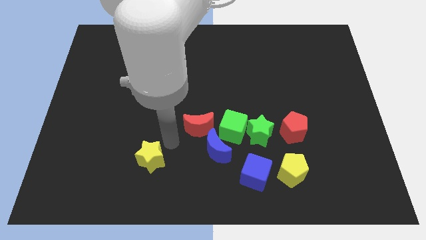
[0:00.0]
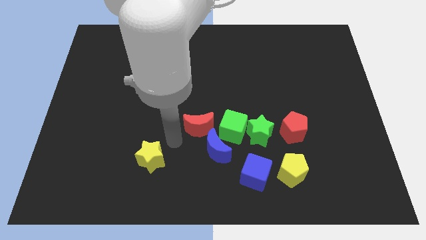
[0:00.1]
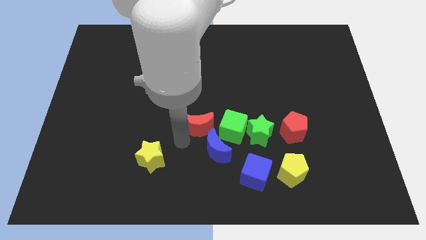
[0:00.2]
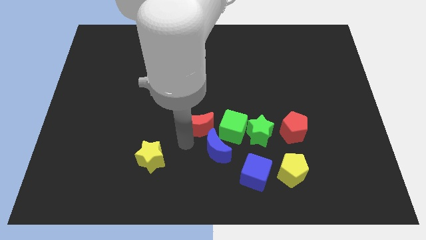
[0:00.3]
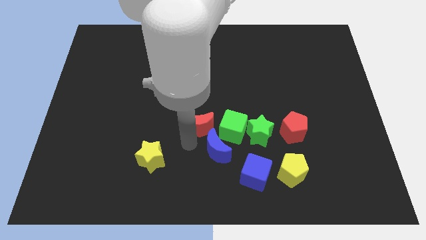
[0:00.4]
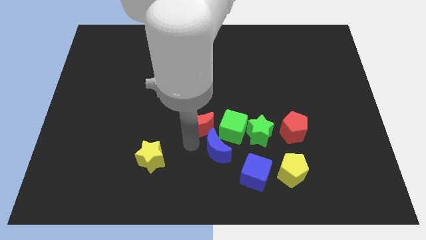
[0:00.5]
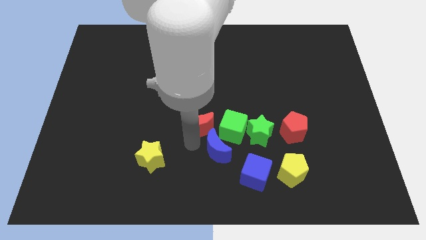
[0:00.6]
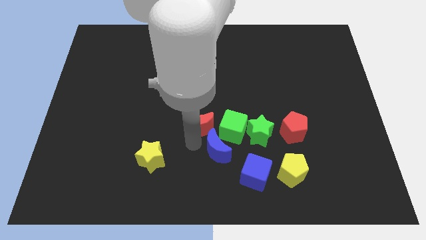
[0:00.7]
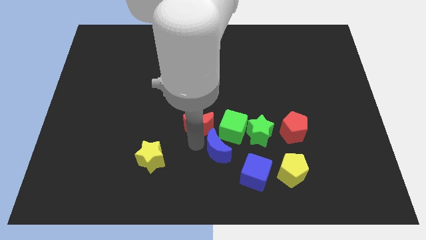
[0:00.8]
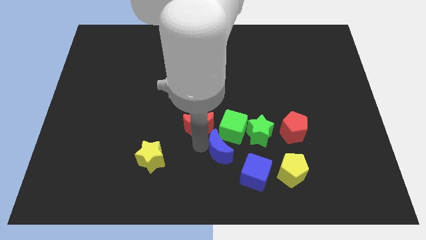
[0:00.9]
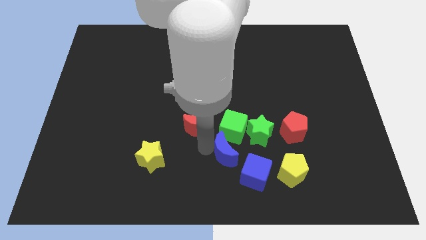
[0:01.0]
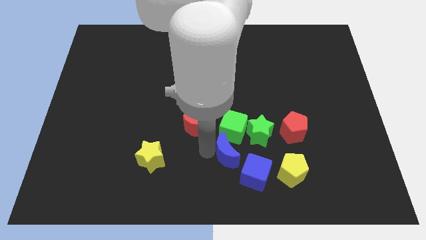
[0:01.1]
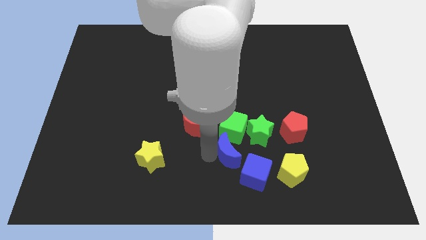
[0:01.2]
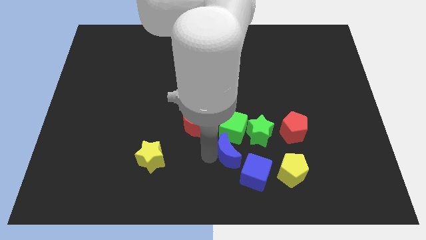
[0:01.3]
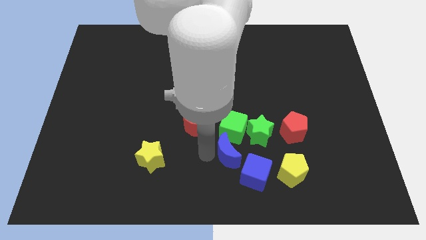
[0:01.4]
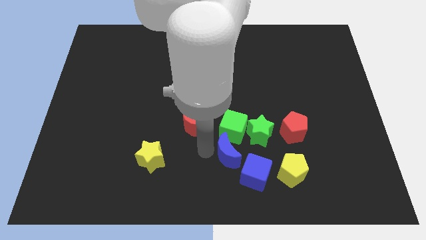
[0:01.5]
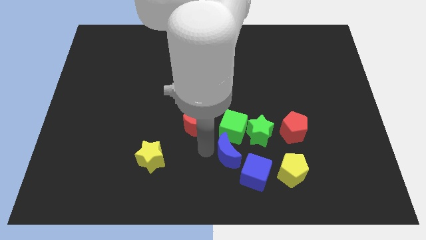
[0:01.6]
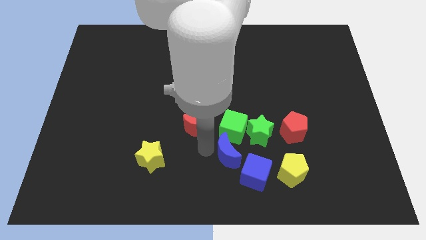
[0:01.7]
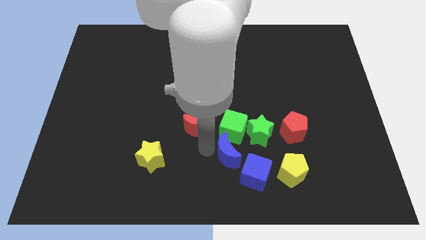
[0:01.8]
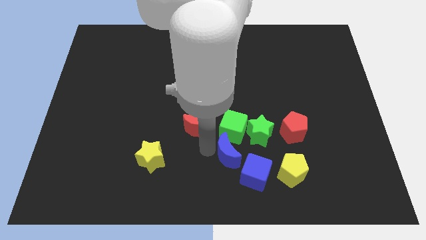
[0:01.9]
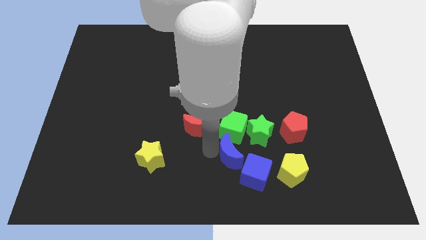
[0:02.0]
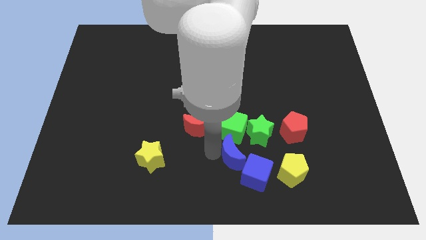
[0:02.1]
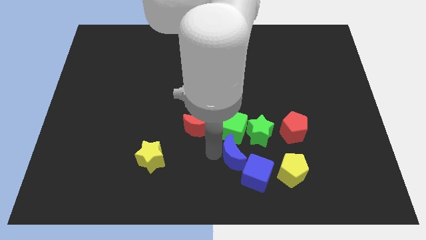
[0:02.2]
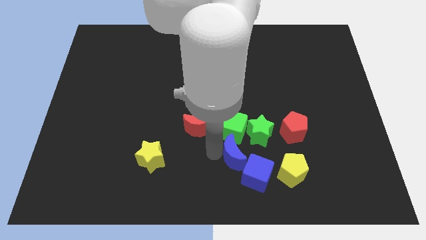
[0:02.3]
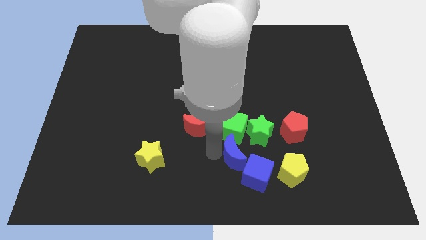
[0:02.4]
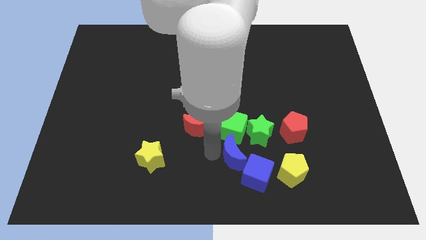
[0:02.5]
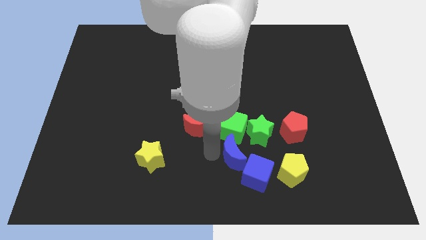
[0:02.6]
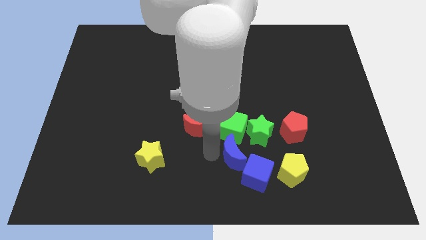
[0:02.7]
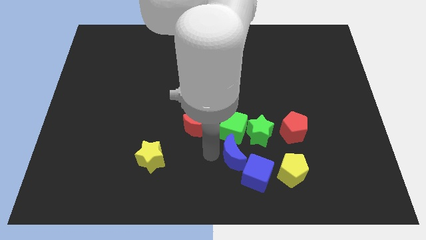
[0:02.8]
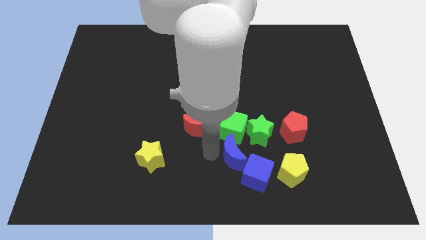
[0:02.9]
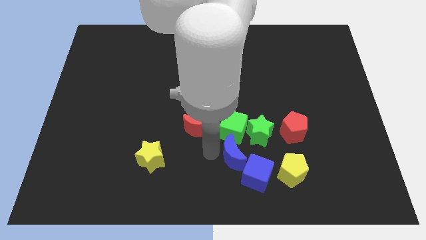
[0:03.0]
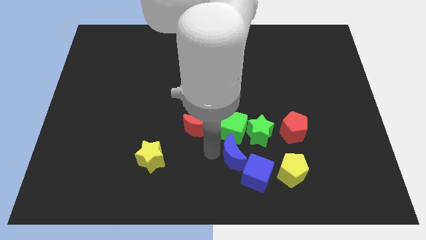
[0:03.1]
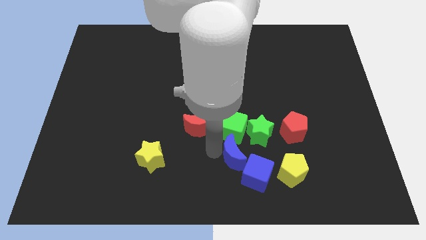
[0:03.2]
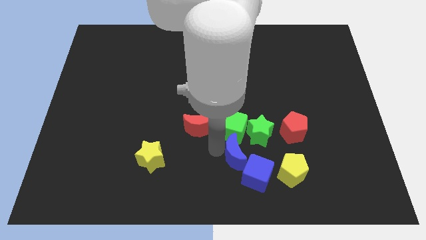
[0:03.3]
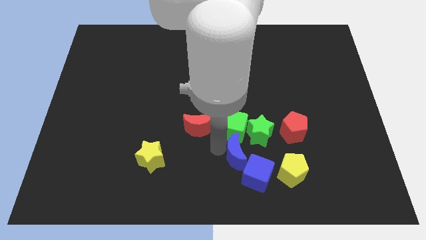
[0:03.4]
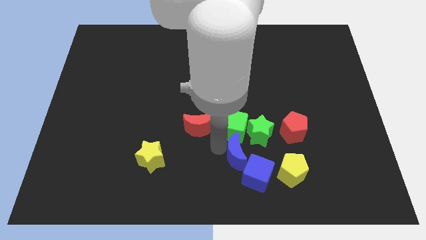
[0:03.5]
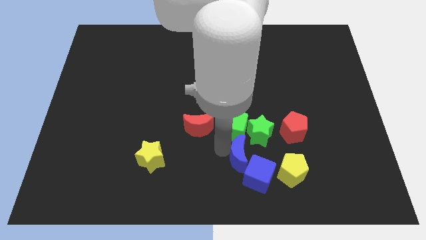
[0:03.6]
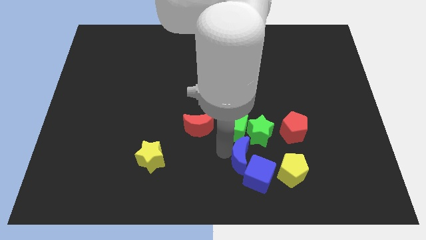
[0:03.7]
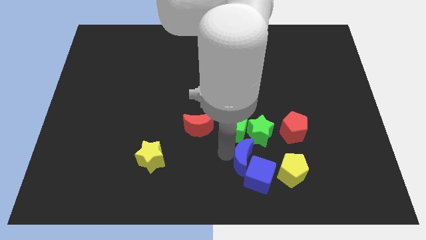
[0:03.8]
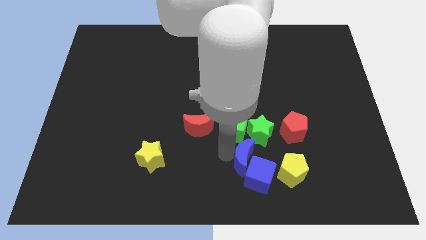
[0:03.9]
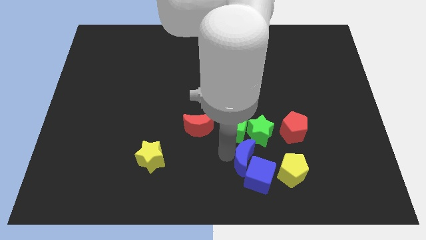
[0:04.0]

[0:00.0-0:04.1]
push the blue crescent into blue cube

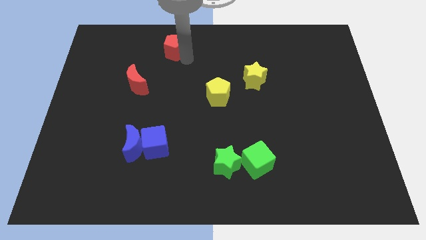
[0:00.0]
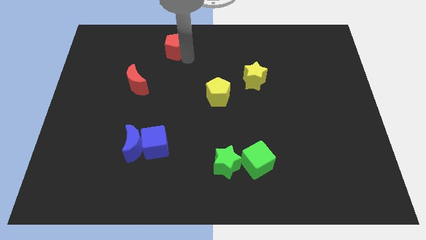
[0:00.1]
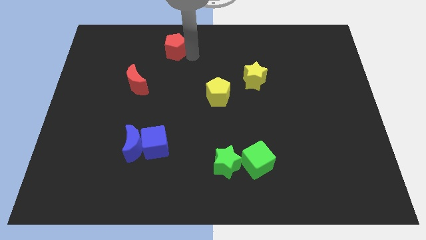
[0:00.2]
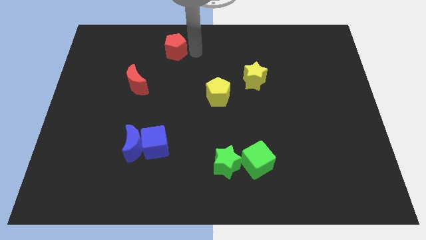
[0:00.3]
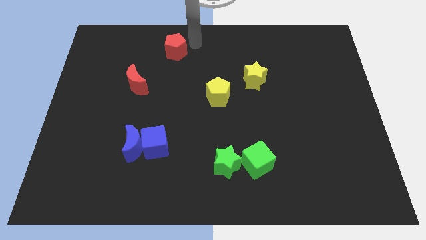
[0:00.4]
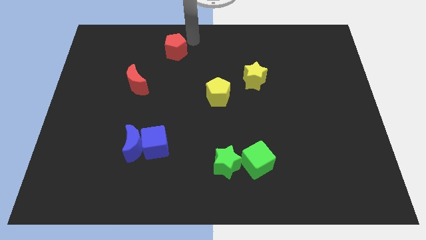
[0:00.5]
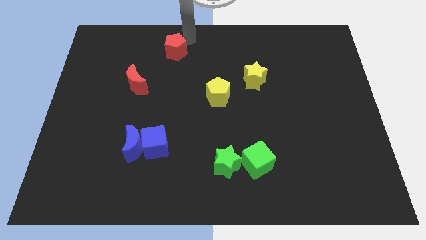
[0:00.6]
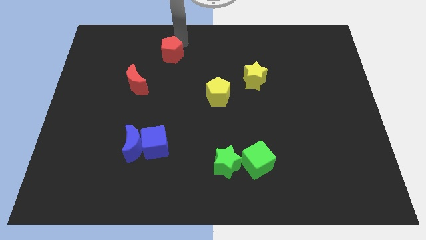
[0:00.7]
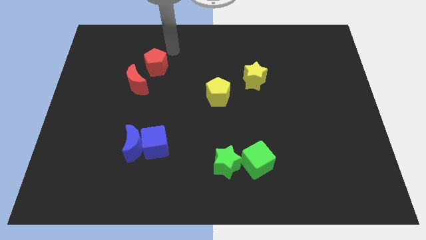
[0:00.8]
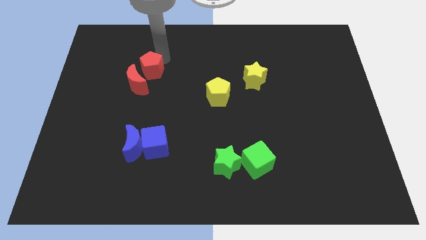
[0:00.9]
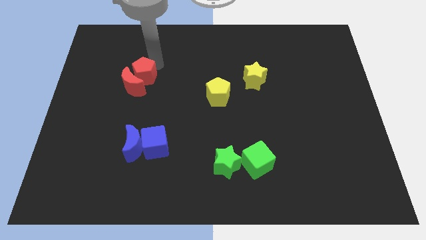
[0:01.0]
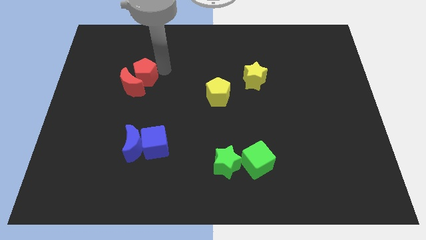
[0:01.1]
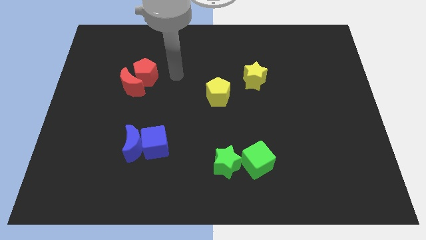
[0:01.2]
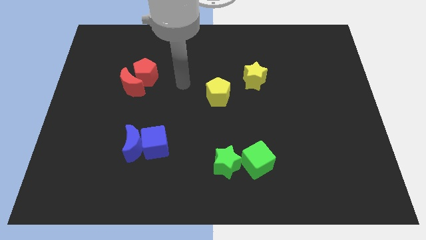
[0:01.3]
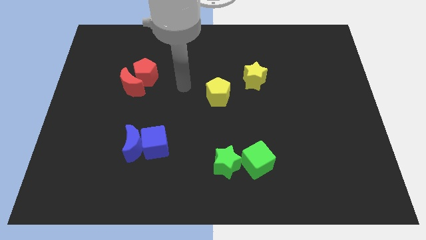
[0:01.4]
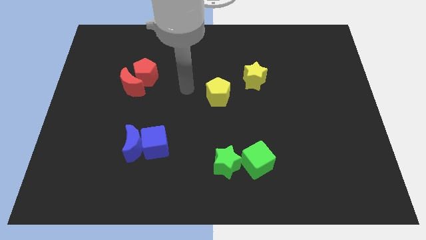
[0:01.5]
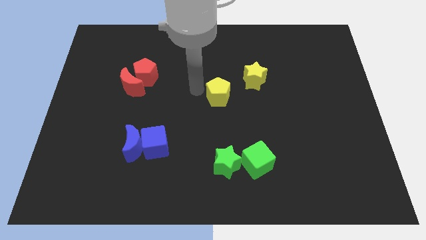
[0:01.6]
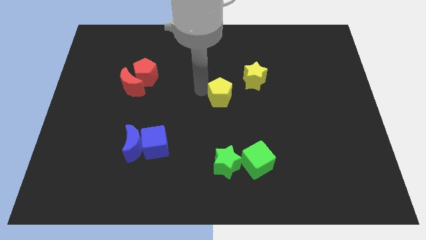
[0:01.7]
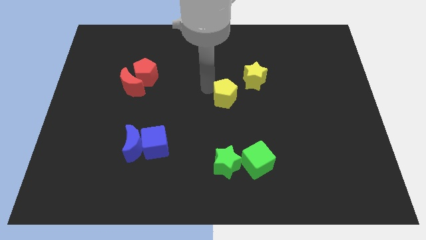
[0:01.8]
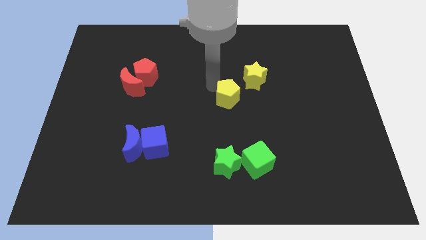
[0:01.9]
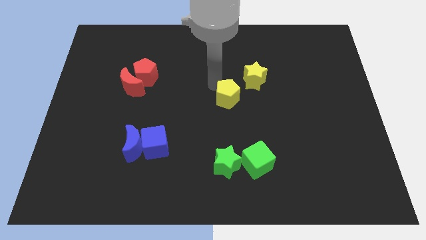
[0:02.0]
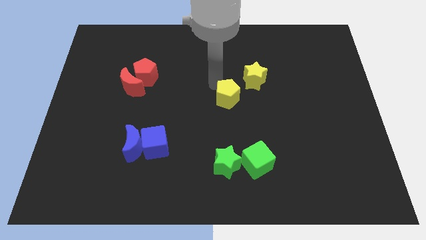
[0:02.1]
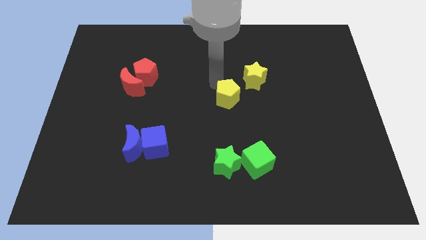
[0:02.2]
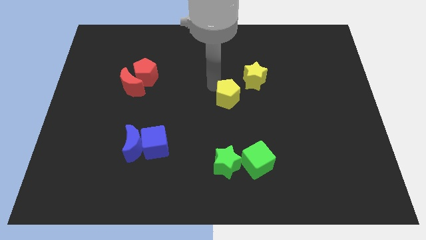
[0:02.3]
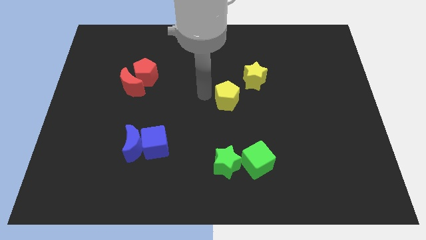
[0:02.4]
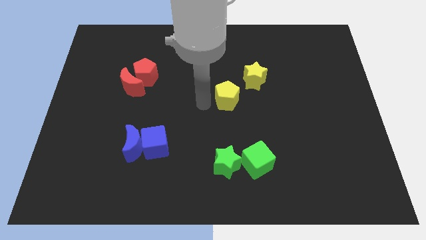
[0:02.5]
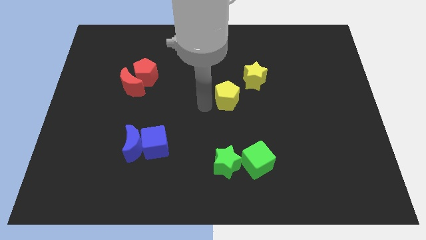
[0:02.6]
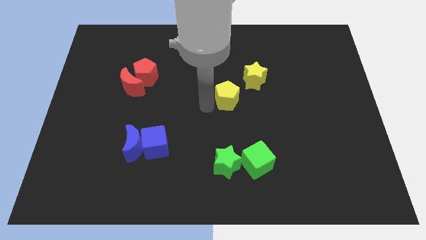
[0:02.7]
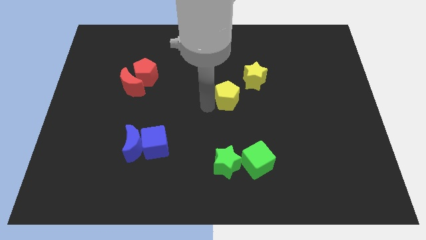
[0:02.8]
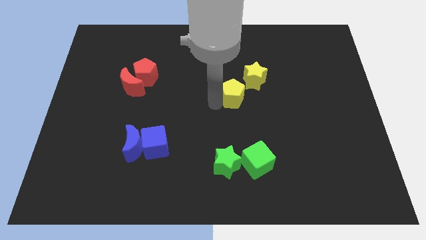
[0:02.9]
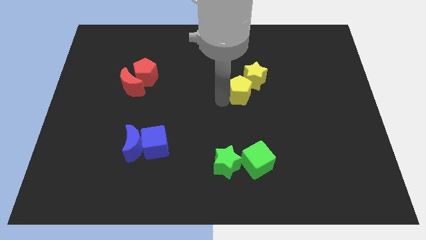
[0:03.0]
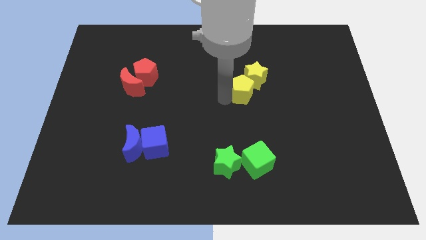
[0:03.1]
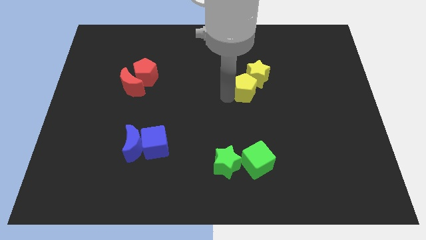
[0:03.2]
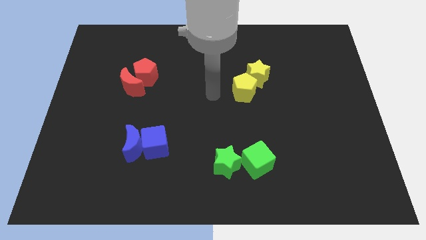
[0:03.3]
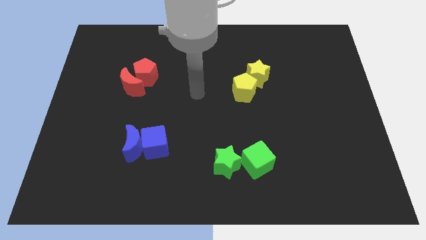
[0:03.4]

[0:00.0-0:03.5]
group up the red and yellow blocks separately

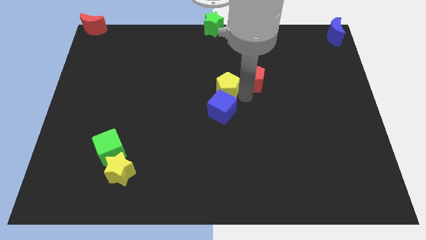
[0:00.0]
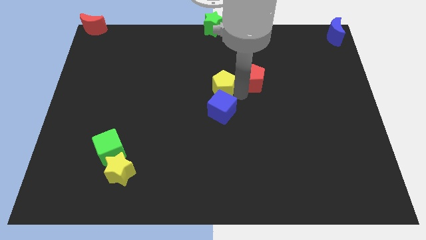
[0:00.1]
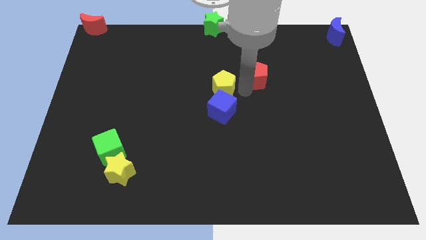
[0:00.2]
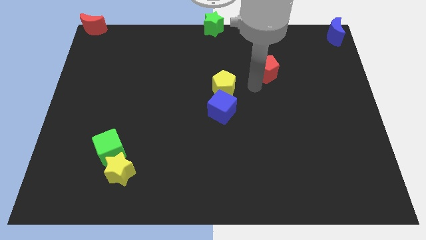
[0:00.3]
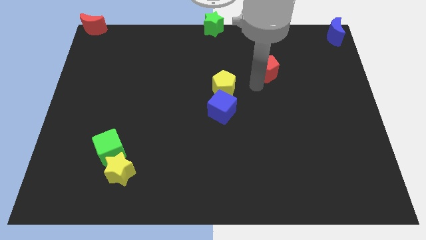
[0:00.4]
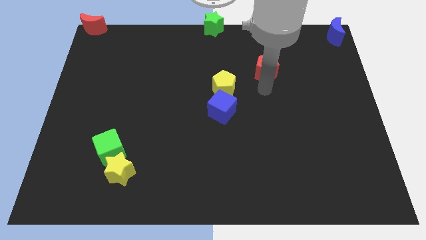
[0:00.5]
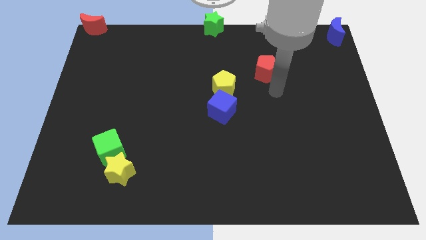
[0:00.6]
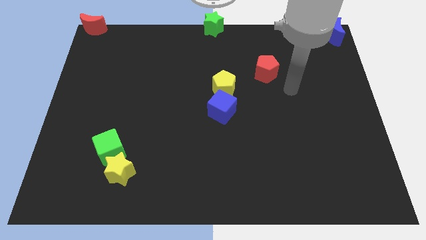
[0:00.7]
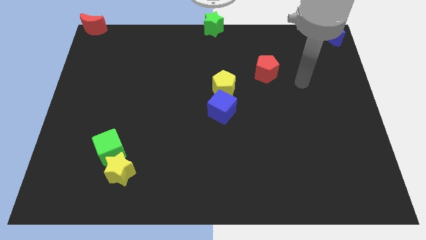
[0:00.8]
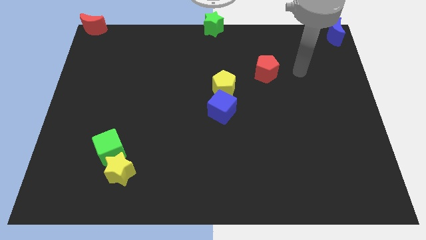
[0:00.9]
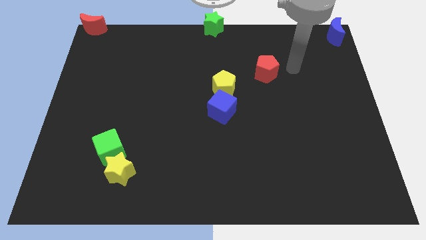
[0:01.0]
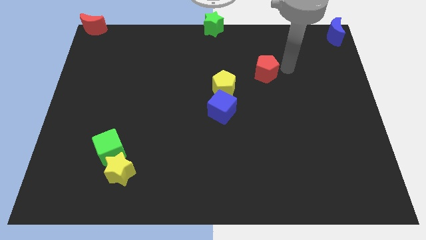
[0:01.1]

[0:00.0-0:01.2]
separate yellow pentagon and red pentagon

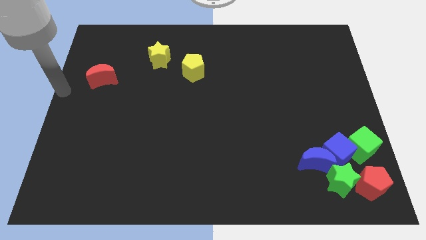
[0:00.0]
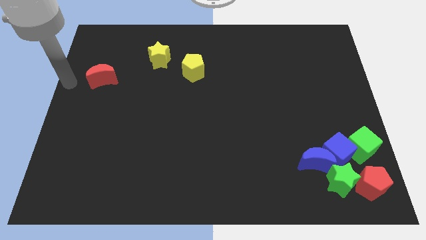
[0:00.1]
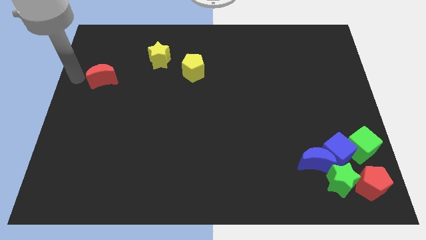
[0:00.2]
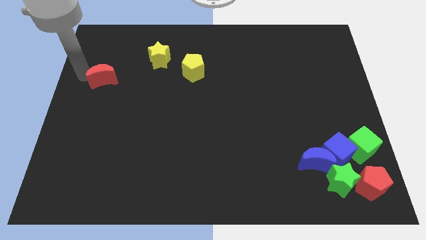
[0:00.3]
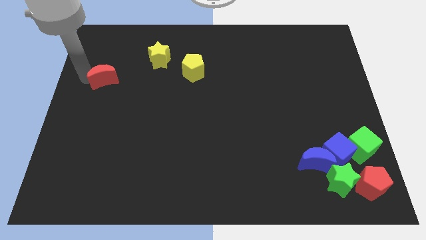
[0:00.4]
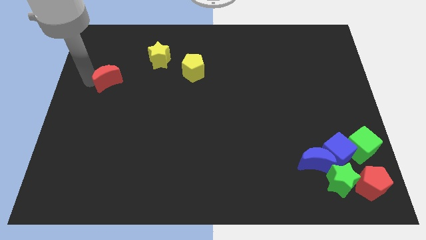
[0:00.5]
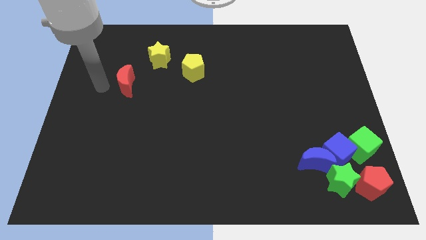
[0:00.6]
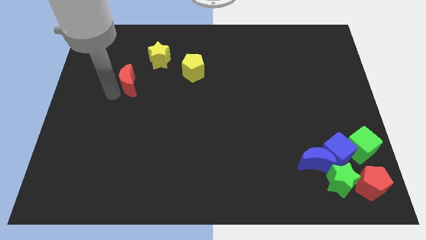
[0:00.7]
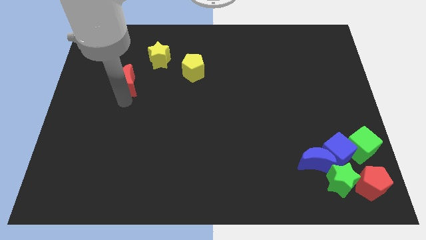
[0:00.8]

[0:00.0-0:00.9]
move the red crescent to the right
